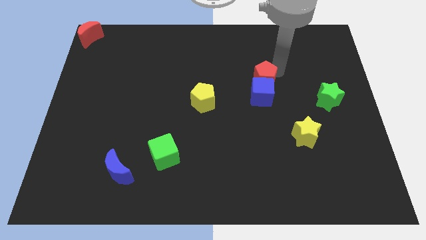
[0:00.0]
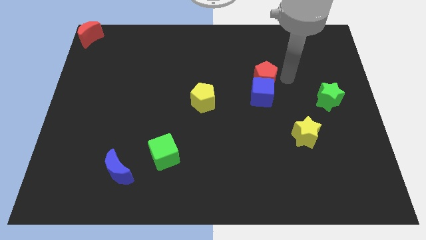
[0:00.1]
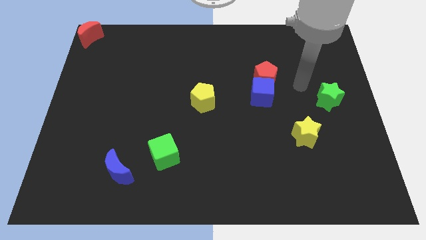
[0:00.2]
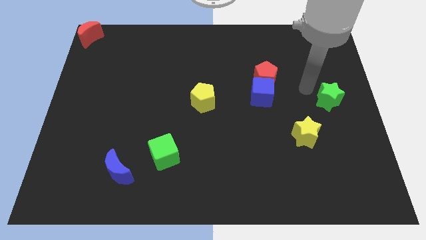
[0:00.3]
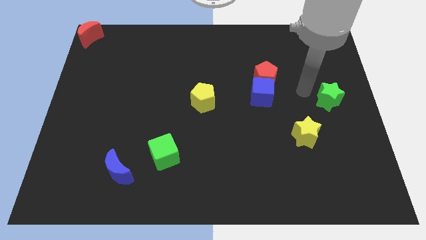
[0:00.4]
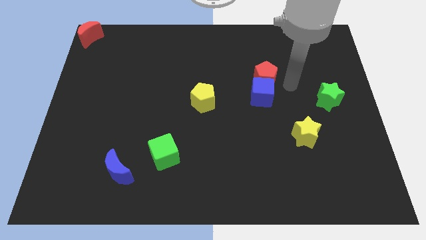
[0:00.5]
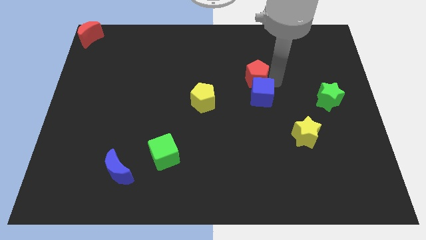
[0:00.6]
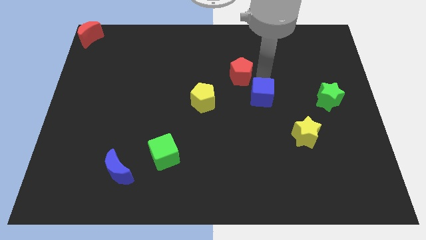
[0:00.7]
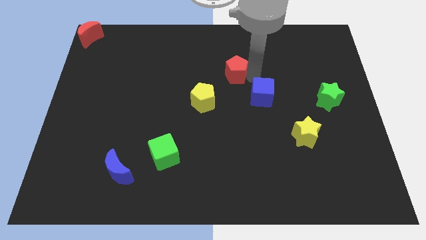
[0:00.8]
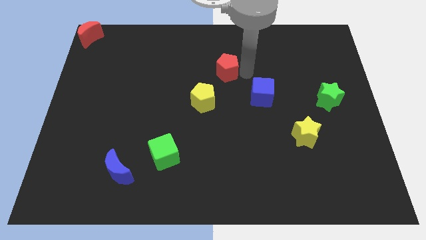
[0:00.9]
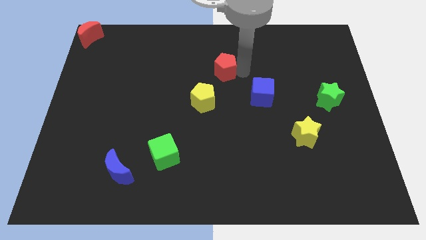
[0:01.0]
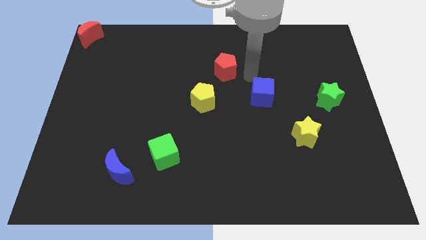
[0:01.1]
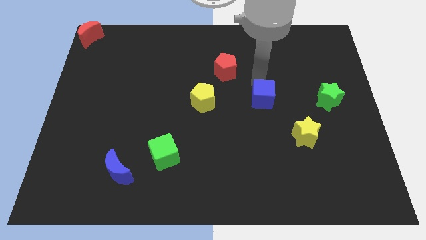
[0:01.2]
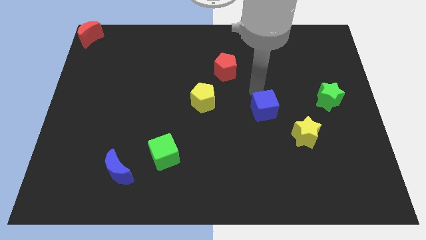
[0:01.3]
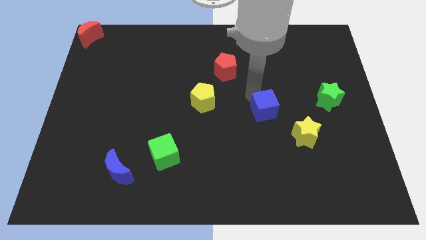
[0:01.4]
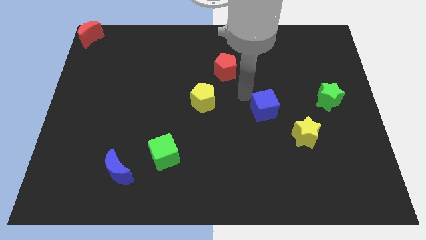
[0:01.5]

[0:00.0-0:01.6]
place the red pentagon at the top of the yellow pentagon

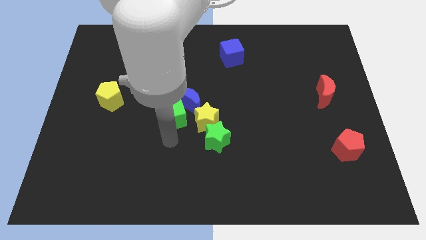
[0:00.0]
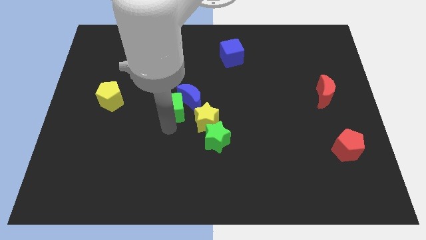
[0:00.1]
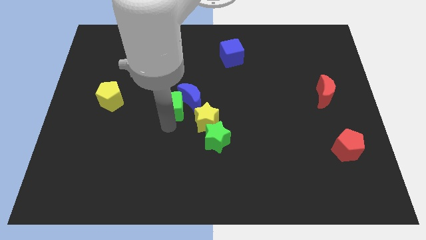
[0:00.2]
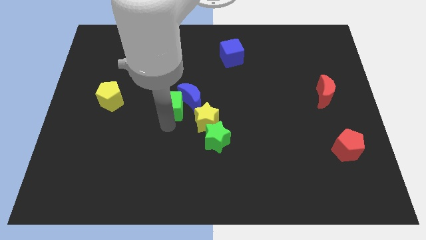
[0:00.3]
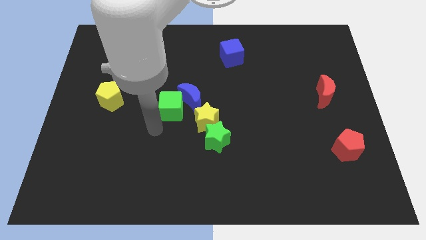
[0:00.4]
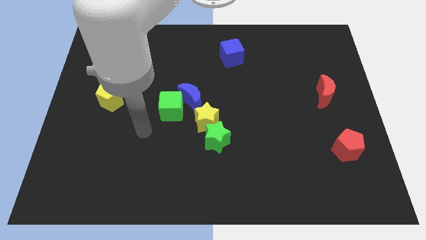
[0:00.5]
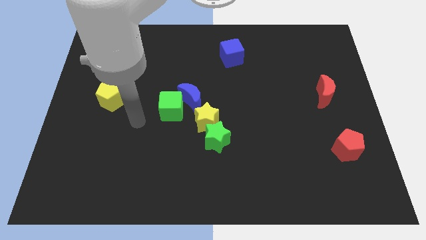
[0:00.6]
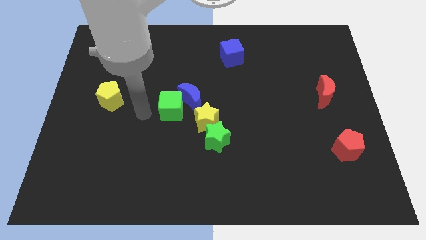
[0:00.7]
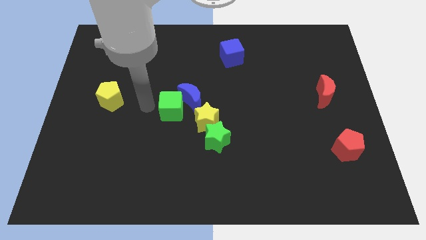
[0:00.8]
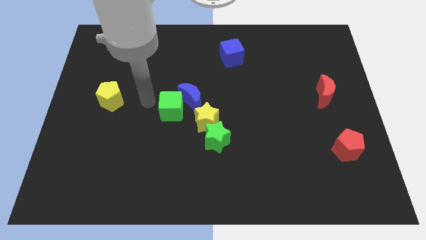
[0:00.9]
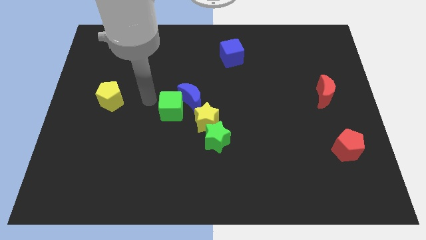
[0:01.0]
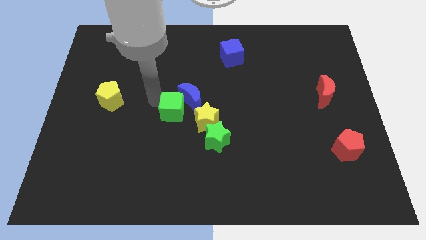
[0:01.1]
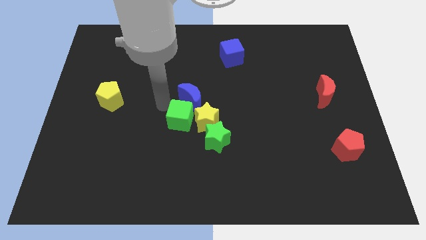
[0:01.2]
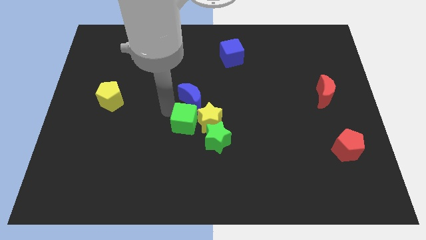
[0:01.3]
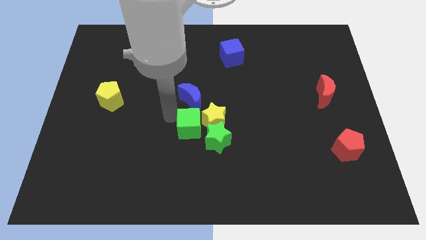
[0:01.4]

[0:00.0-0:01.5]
move the green cube to the group of objects

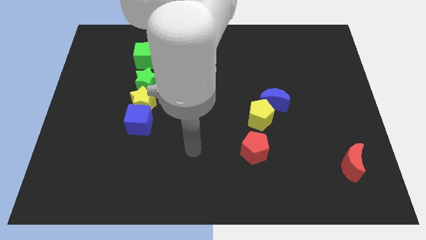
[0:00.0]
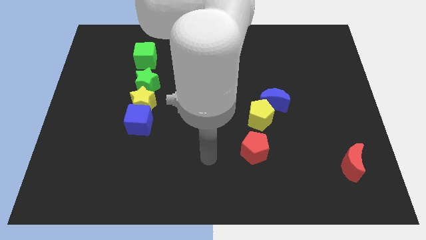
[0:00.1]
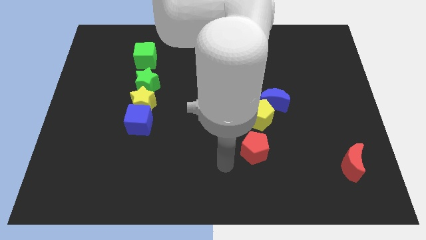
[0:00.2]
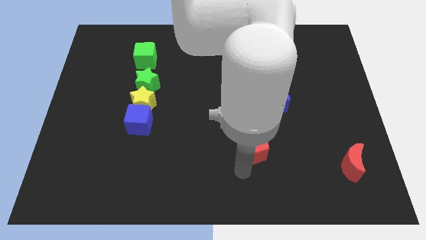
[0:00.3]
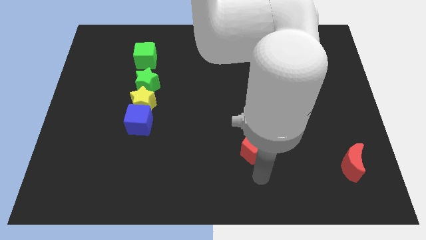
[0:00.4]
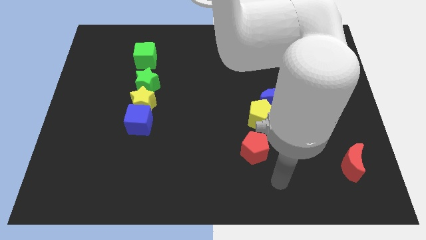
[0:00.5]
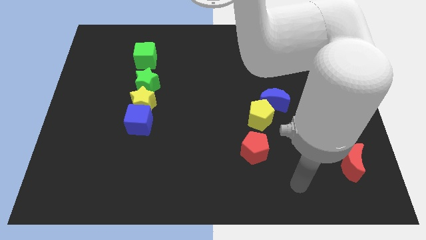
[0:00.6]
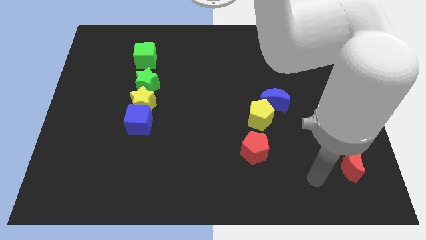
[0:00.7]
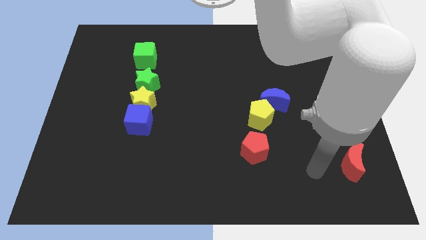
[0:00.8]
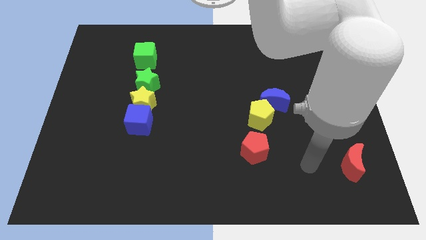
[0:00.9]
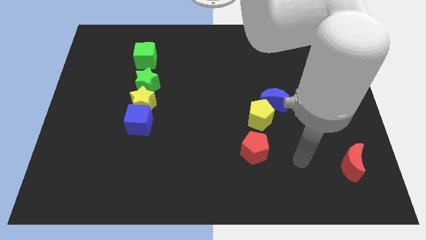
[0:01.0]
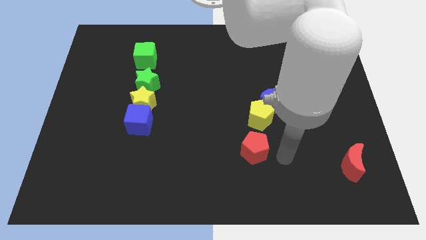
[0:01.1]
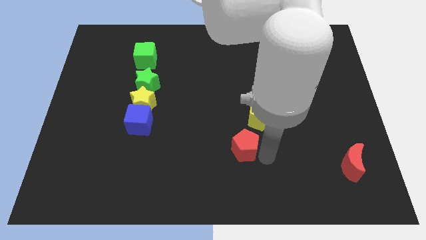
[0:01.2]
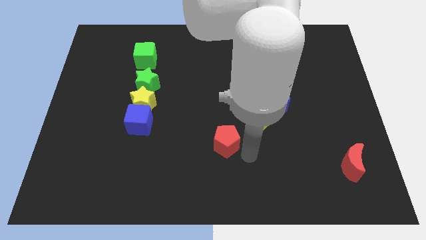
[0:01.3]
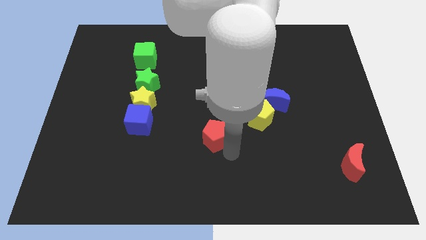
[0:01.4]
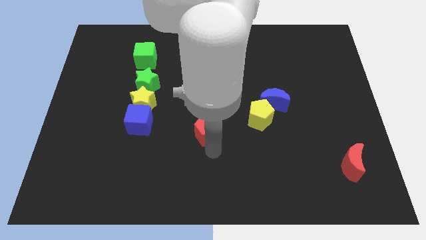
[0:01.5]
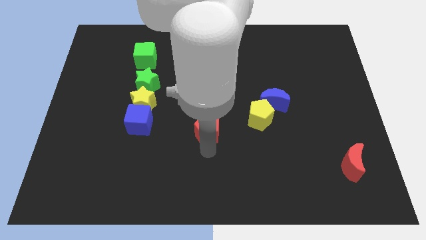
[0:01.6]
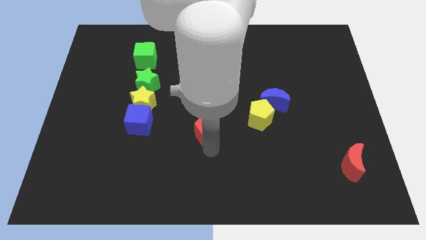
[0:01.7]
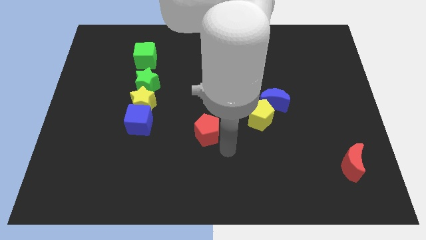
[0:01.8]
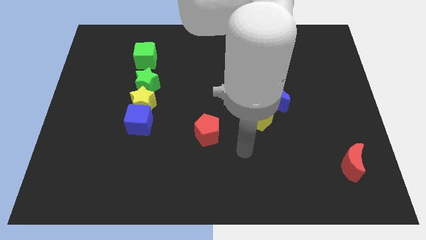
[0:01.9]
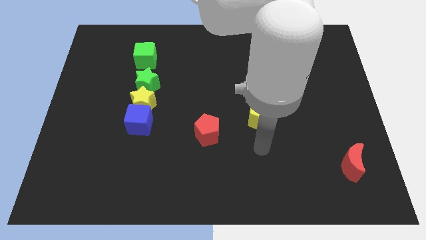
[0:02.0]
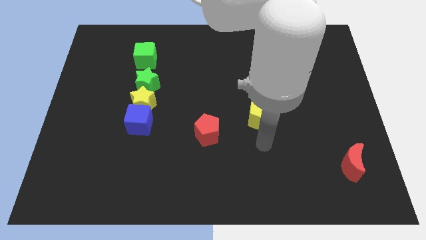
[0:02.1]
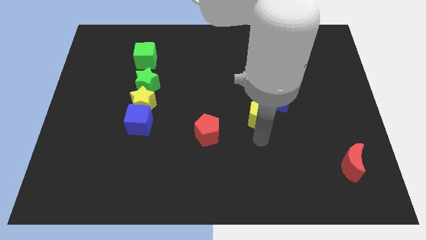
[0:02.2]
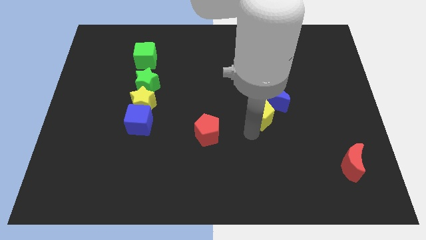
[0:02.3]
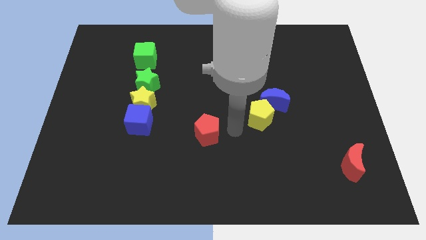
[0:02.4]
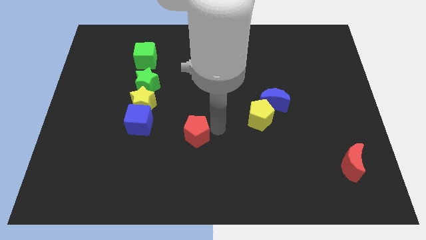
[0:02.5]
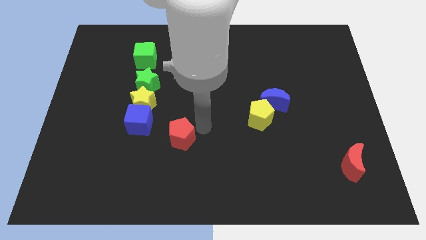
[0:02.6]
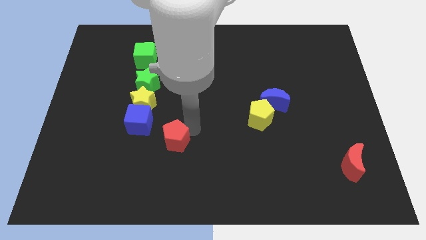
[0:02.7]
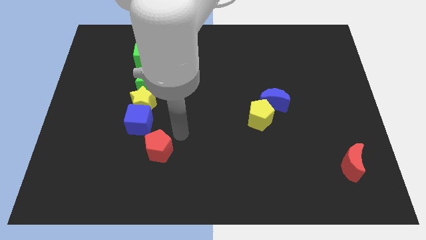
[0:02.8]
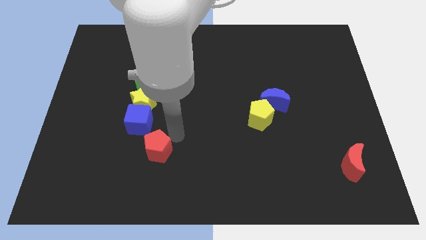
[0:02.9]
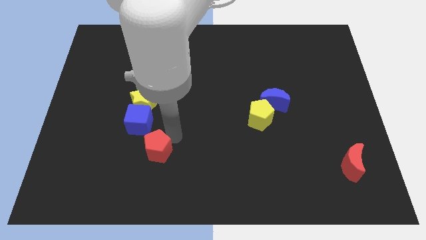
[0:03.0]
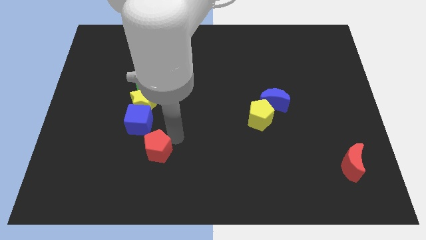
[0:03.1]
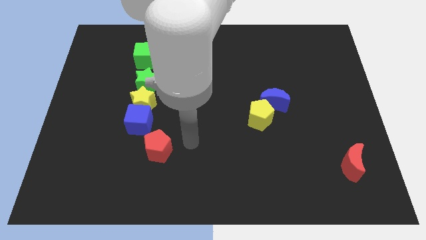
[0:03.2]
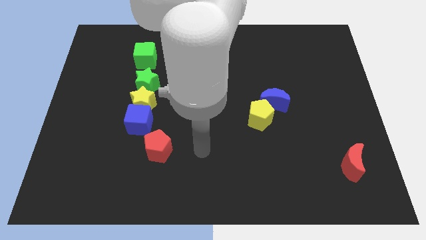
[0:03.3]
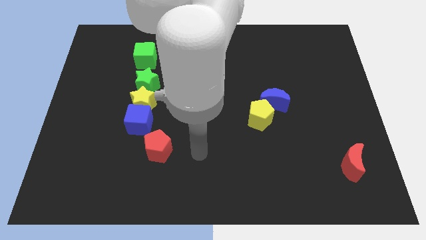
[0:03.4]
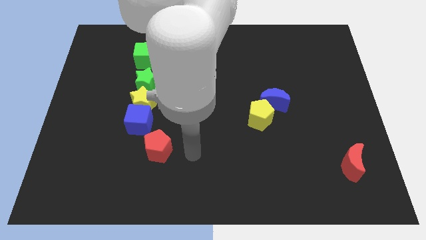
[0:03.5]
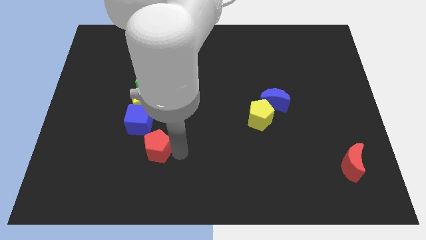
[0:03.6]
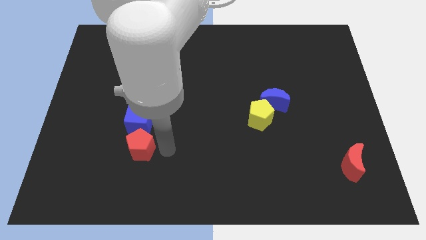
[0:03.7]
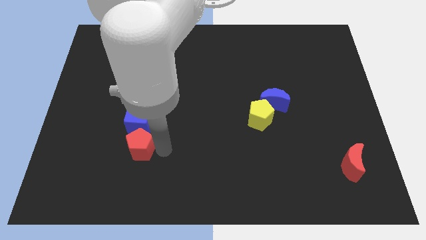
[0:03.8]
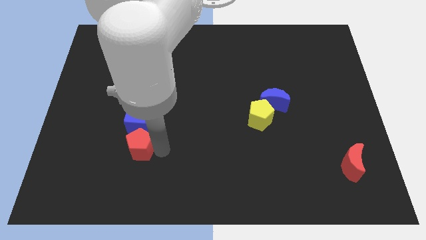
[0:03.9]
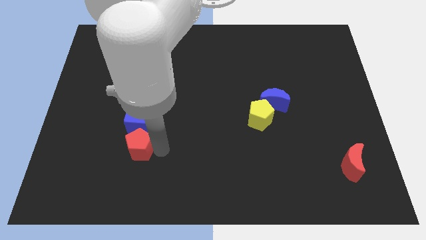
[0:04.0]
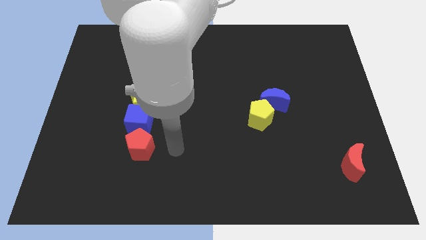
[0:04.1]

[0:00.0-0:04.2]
move the red pentagon to the bottom side of the blue cube

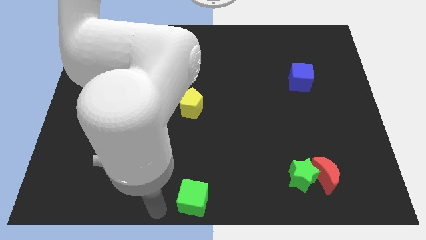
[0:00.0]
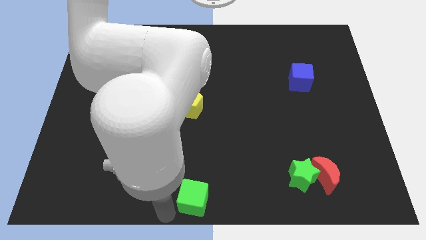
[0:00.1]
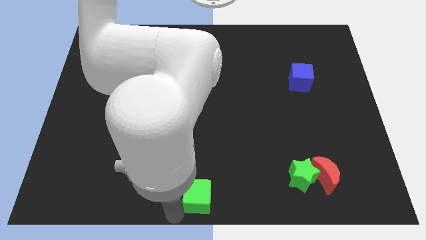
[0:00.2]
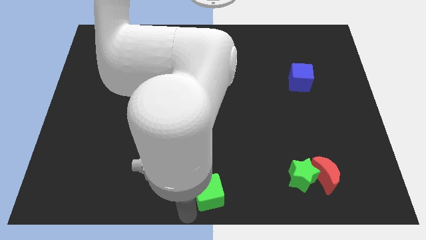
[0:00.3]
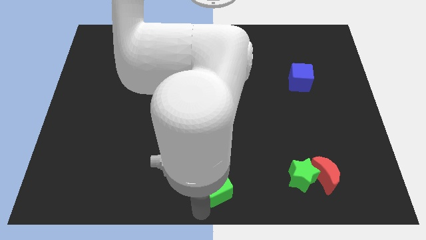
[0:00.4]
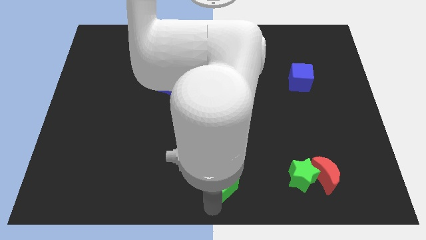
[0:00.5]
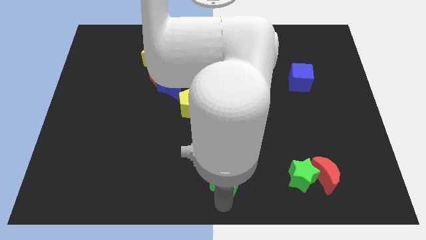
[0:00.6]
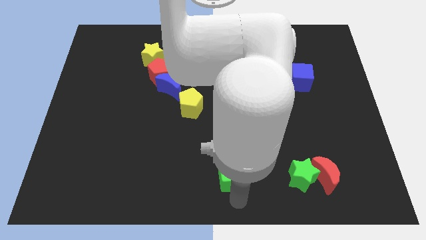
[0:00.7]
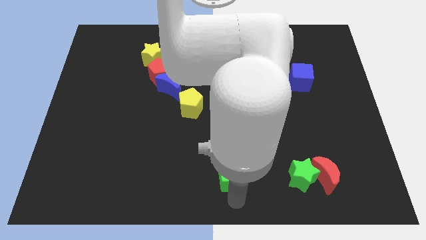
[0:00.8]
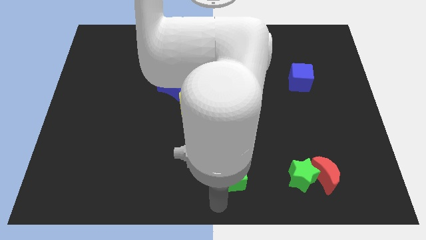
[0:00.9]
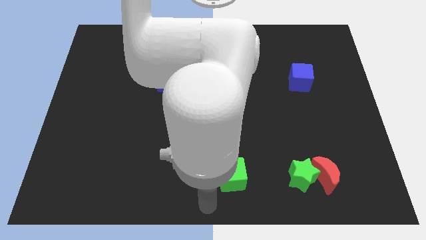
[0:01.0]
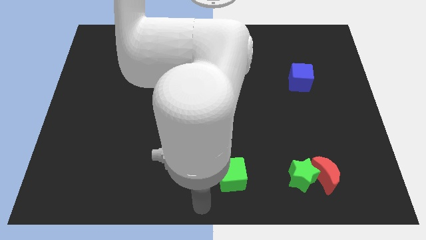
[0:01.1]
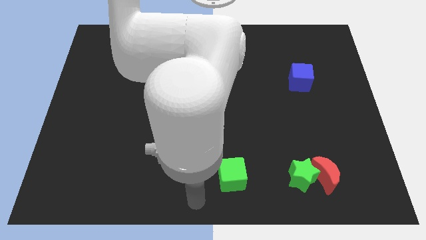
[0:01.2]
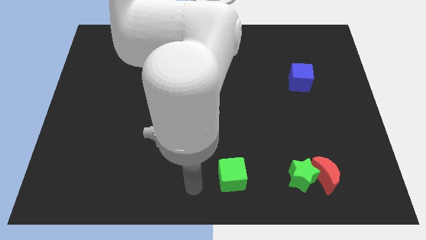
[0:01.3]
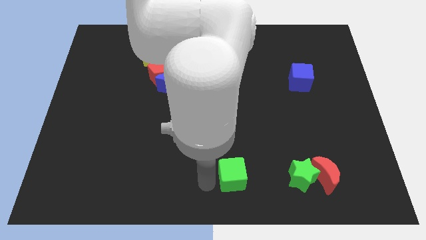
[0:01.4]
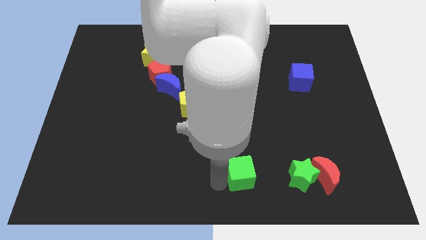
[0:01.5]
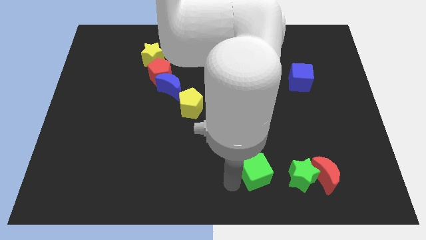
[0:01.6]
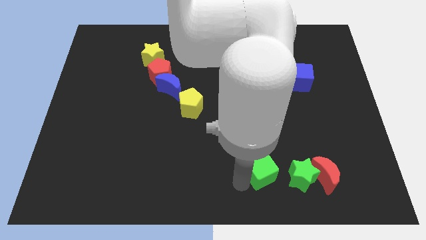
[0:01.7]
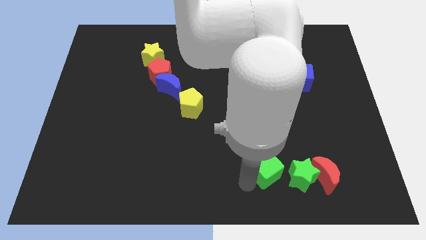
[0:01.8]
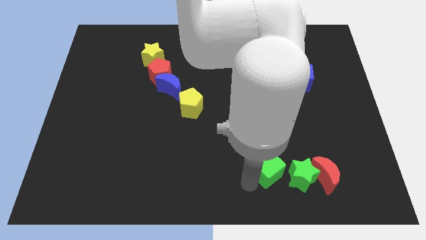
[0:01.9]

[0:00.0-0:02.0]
drag the green cube towards the green star
